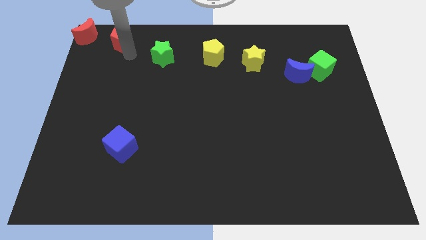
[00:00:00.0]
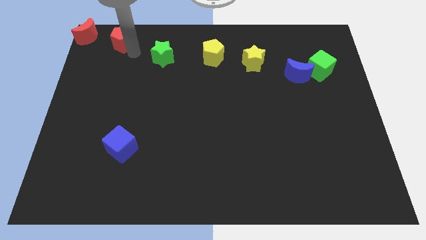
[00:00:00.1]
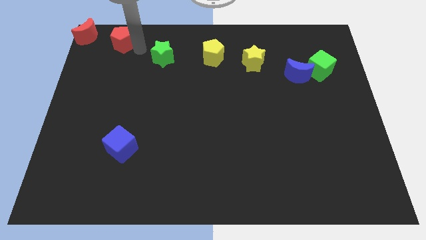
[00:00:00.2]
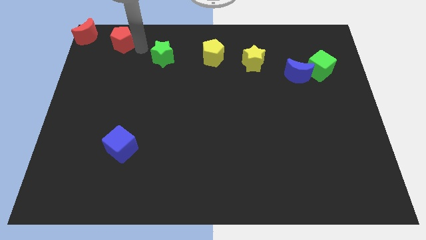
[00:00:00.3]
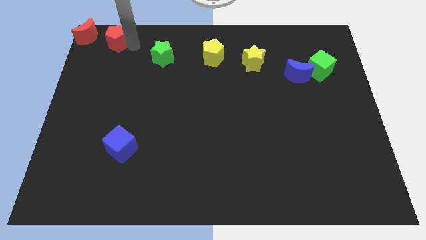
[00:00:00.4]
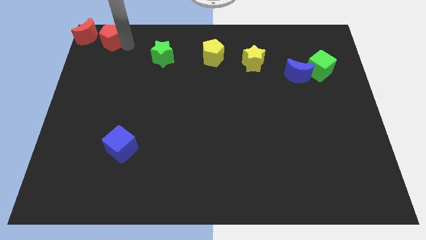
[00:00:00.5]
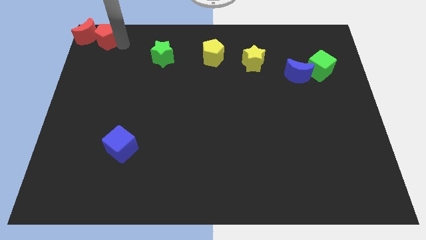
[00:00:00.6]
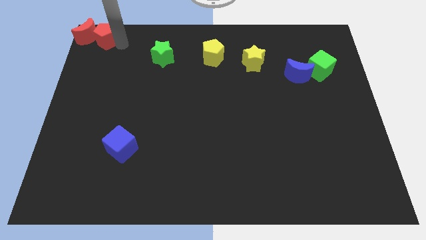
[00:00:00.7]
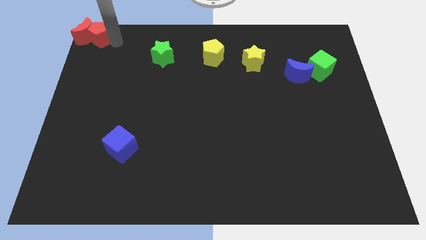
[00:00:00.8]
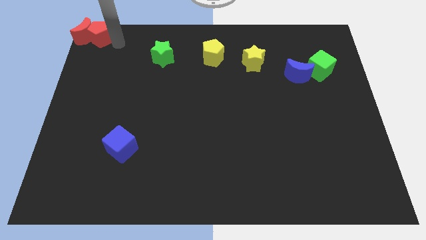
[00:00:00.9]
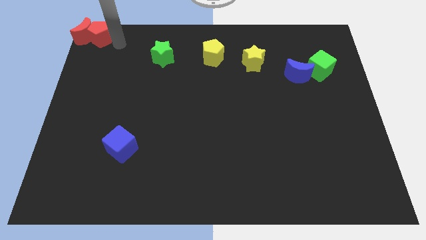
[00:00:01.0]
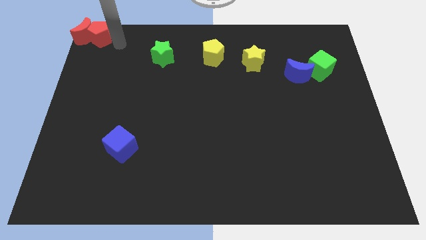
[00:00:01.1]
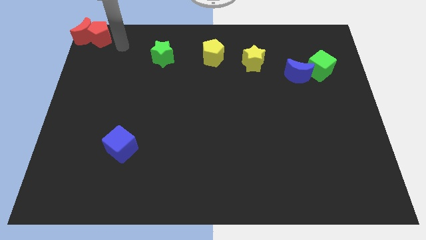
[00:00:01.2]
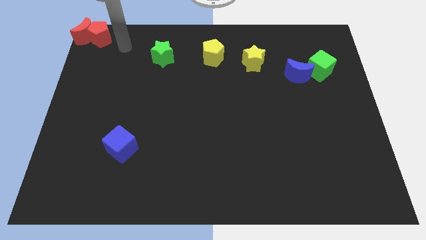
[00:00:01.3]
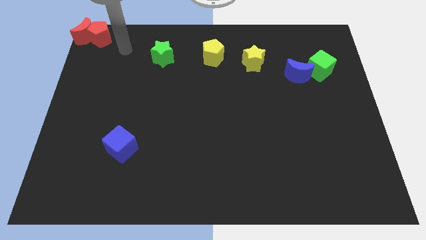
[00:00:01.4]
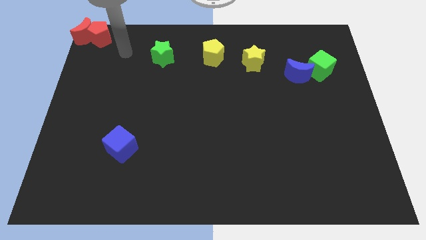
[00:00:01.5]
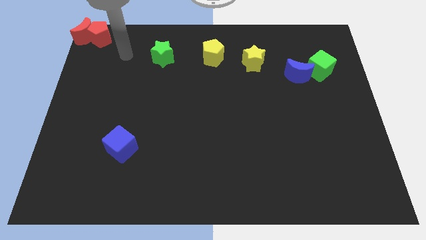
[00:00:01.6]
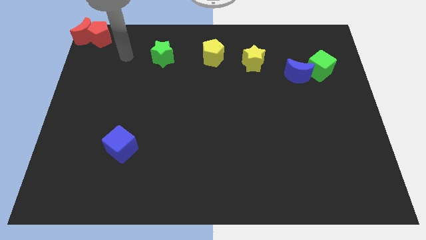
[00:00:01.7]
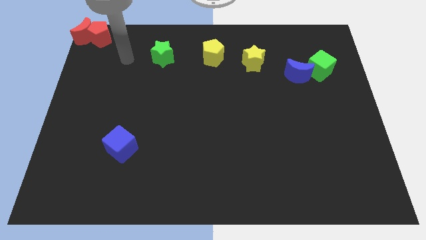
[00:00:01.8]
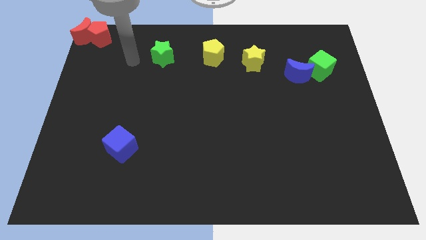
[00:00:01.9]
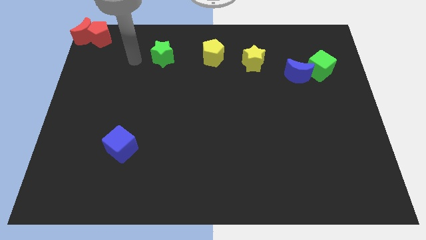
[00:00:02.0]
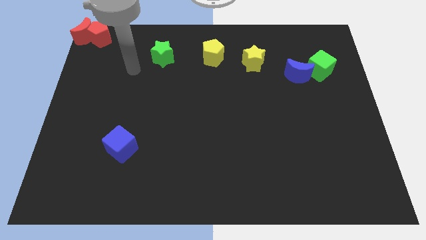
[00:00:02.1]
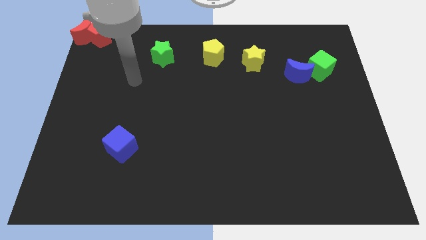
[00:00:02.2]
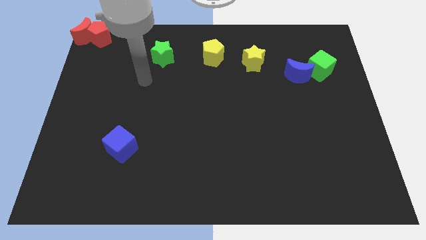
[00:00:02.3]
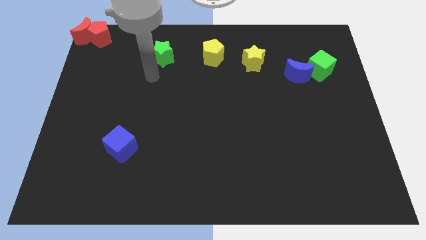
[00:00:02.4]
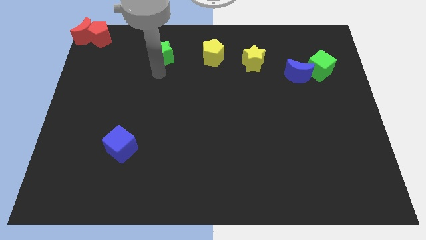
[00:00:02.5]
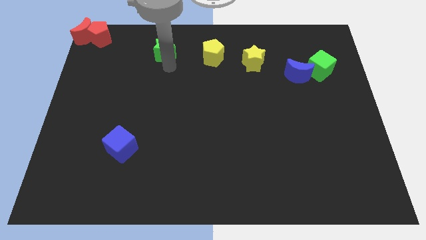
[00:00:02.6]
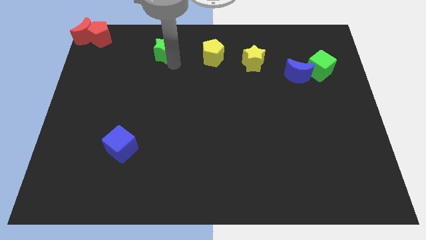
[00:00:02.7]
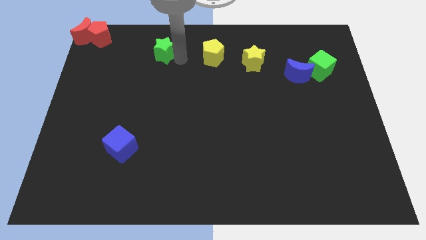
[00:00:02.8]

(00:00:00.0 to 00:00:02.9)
push the red pentagon into red crescent

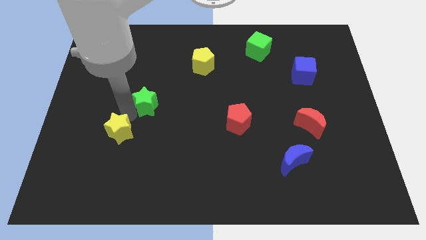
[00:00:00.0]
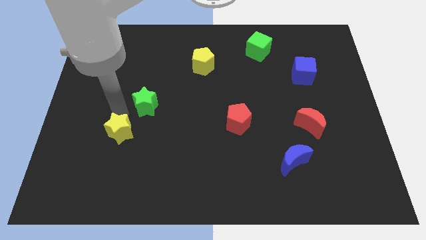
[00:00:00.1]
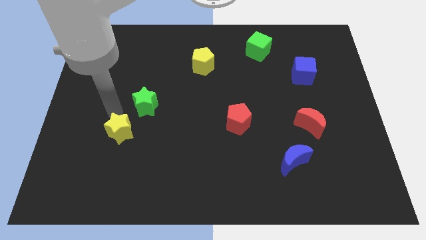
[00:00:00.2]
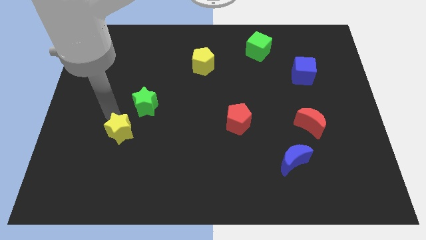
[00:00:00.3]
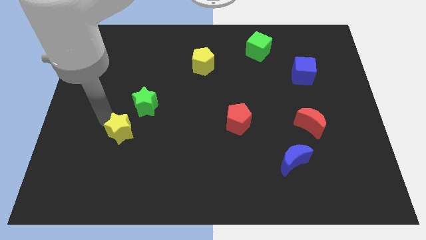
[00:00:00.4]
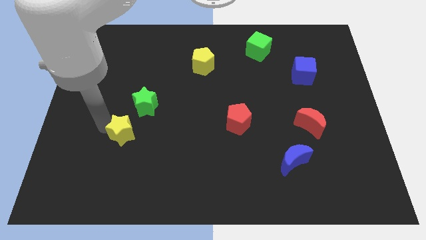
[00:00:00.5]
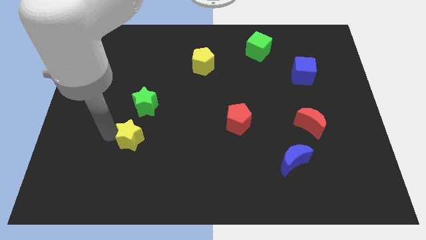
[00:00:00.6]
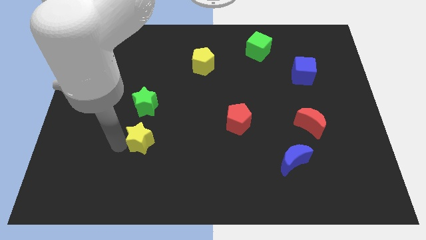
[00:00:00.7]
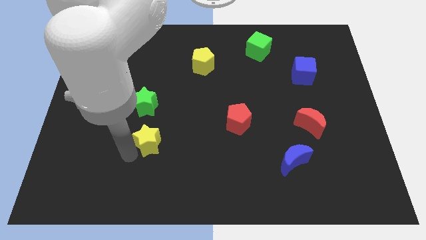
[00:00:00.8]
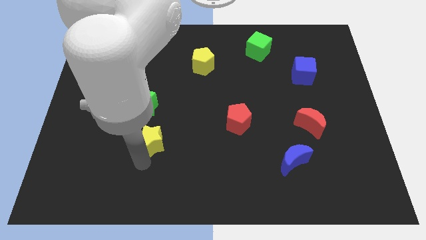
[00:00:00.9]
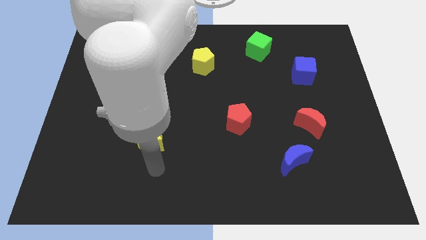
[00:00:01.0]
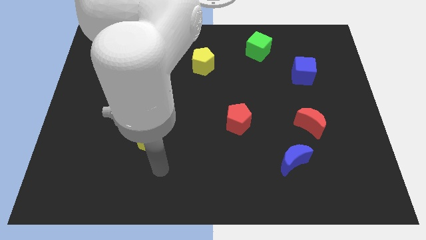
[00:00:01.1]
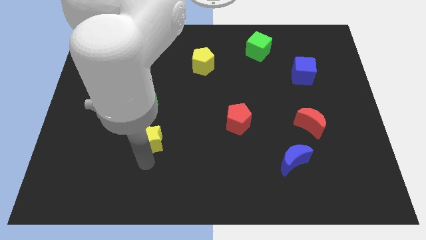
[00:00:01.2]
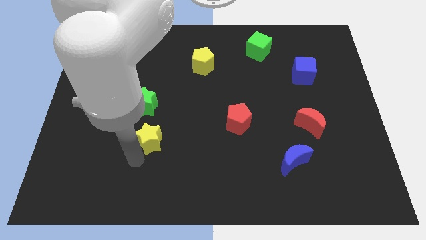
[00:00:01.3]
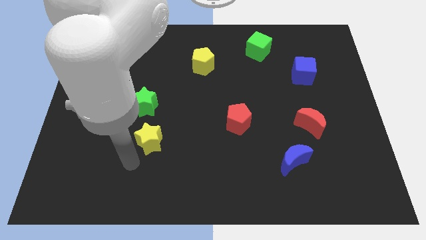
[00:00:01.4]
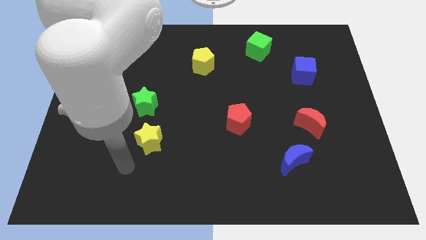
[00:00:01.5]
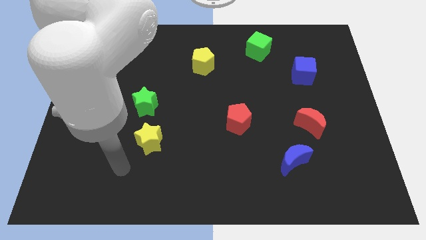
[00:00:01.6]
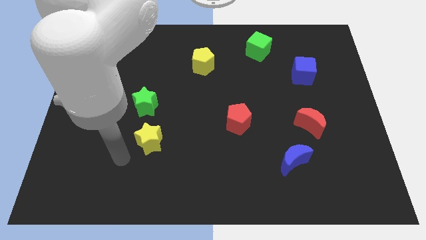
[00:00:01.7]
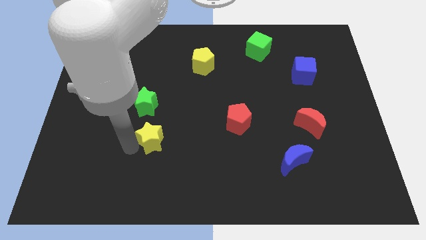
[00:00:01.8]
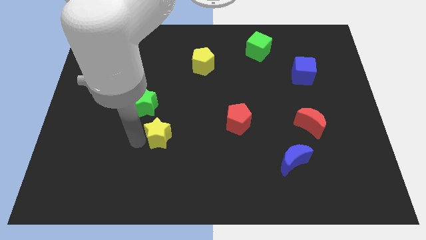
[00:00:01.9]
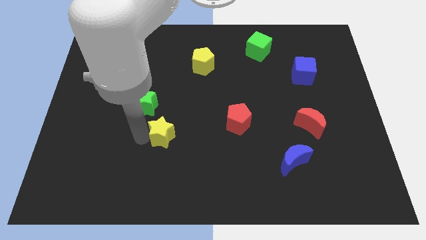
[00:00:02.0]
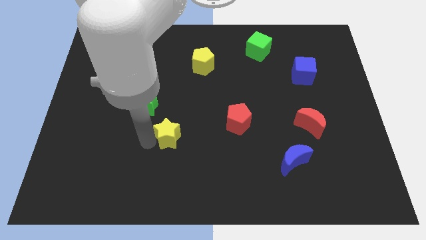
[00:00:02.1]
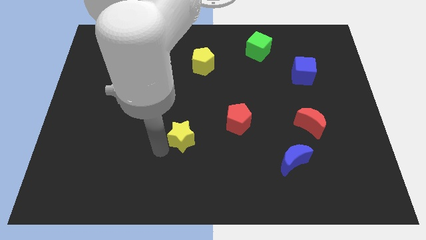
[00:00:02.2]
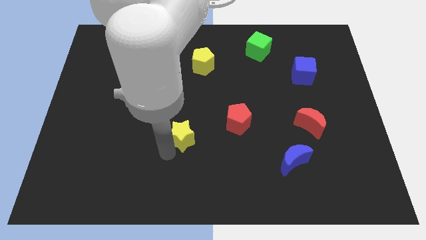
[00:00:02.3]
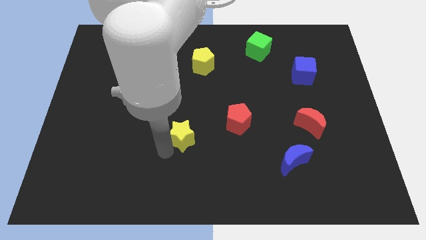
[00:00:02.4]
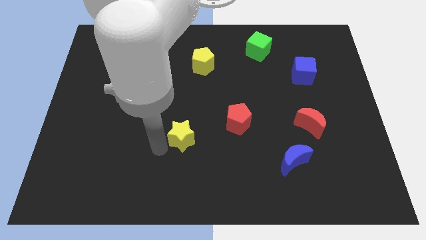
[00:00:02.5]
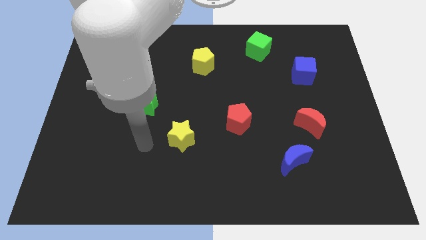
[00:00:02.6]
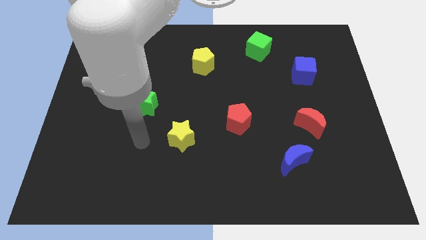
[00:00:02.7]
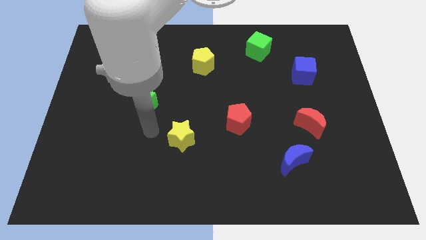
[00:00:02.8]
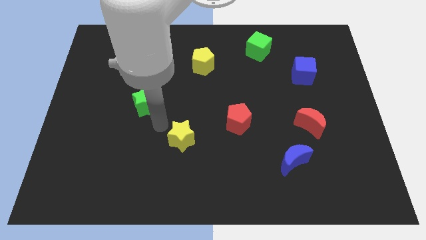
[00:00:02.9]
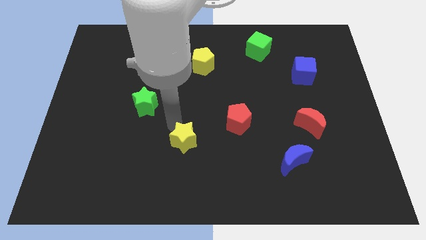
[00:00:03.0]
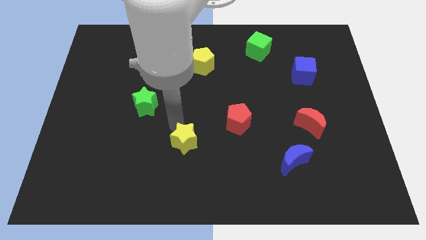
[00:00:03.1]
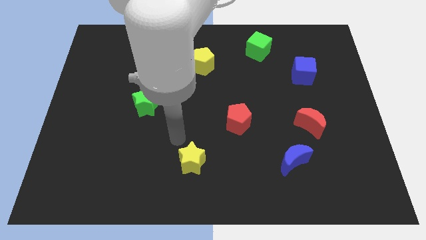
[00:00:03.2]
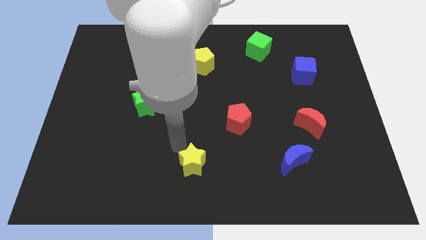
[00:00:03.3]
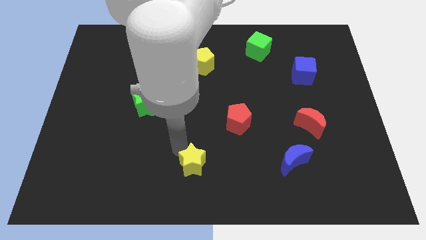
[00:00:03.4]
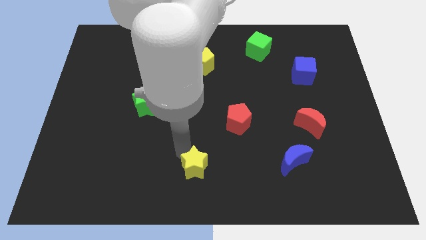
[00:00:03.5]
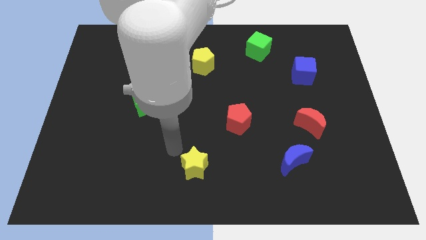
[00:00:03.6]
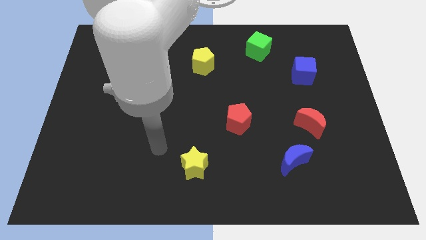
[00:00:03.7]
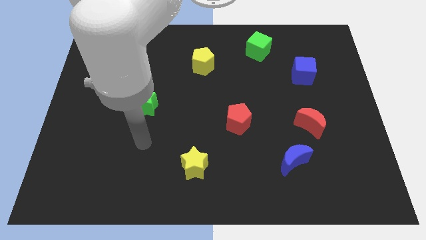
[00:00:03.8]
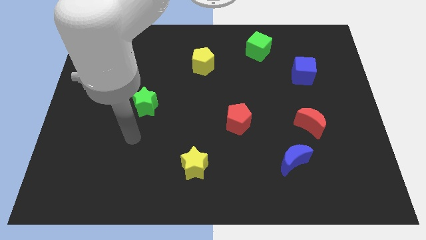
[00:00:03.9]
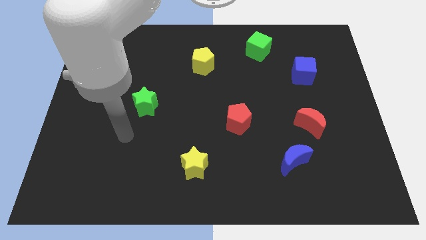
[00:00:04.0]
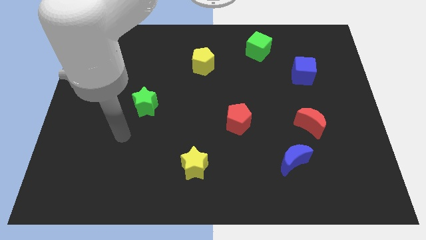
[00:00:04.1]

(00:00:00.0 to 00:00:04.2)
move the yellow star towards the bottom center of the board

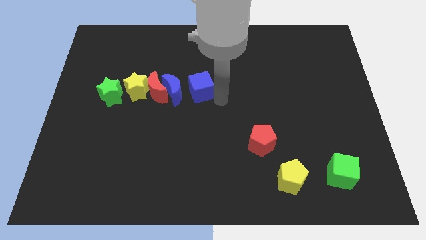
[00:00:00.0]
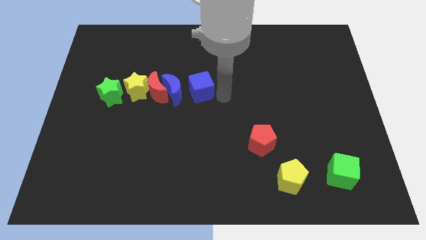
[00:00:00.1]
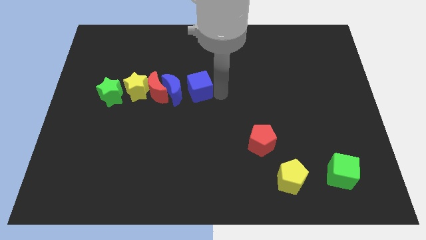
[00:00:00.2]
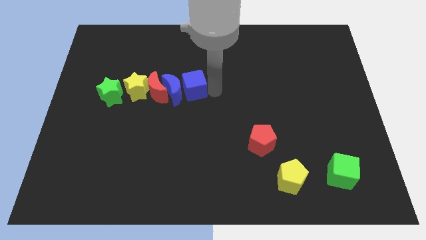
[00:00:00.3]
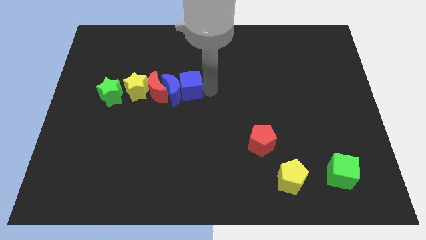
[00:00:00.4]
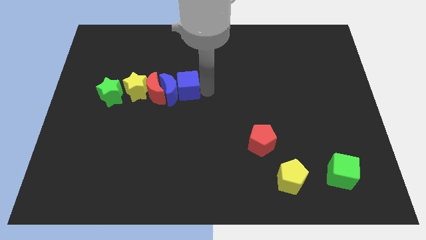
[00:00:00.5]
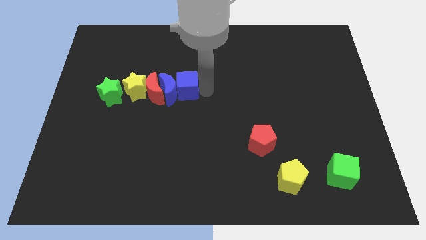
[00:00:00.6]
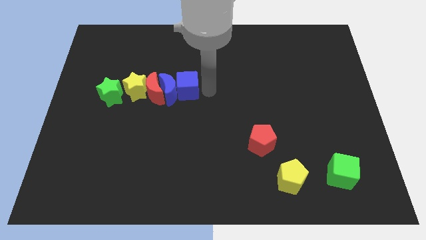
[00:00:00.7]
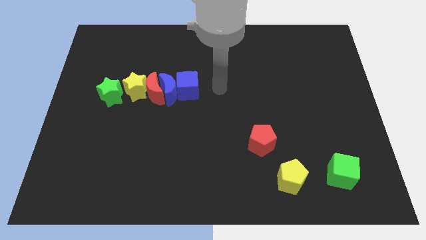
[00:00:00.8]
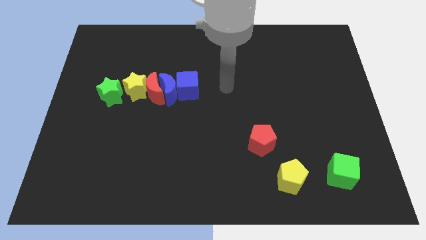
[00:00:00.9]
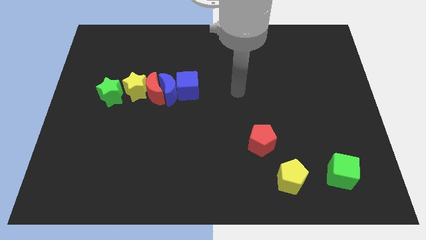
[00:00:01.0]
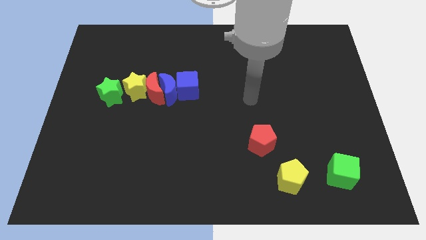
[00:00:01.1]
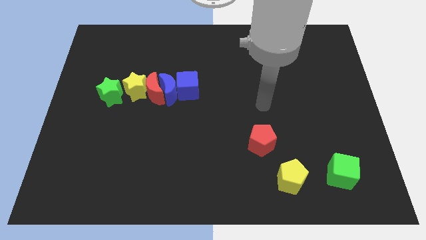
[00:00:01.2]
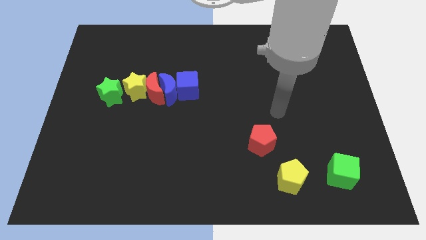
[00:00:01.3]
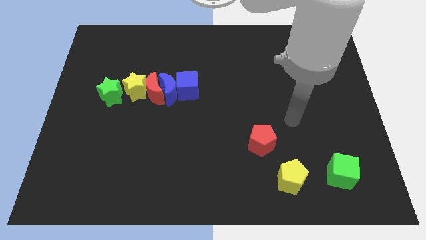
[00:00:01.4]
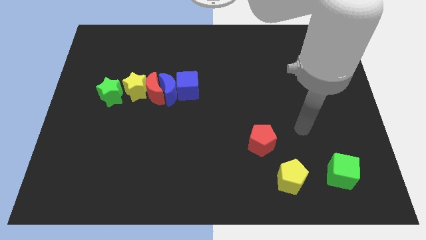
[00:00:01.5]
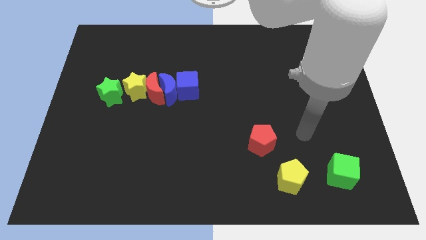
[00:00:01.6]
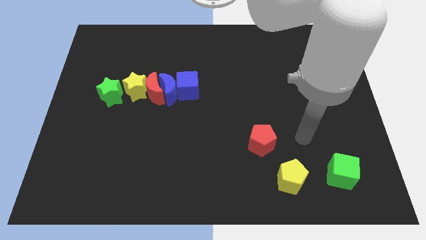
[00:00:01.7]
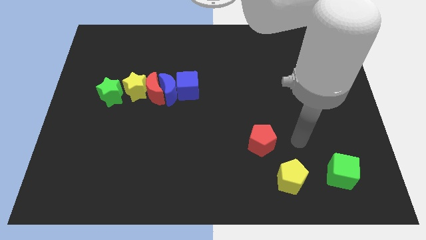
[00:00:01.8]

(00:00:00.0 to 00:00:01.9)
move the blue cube into the blue moon
